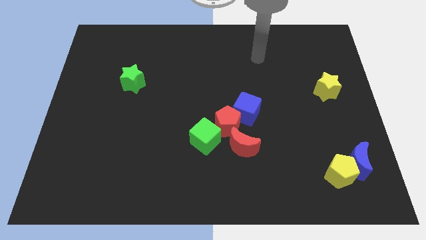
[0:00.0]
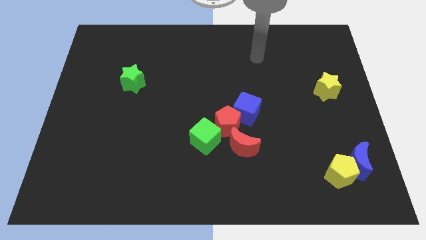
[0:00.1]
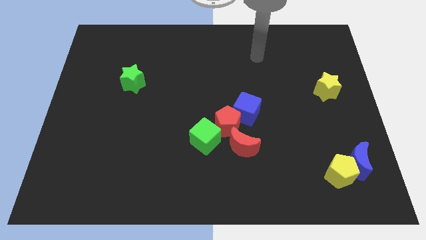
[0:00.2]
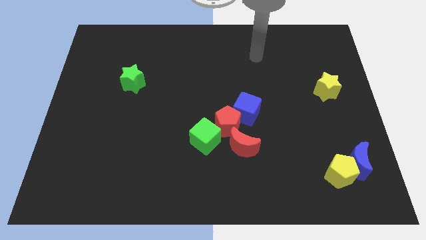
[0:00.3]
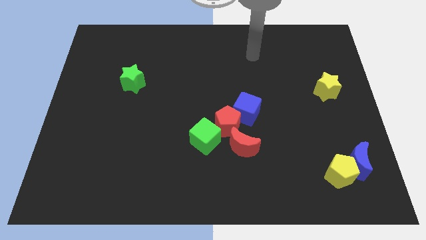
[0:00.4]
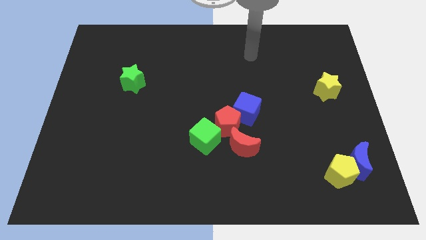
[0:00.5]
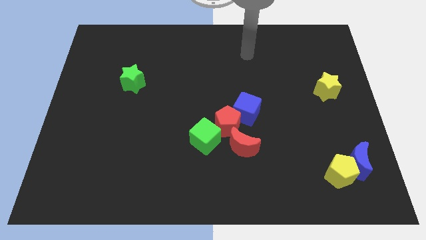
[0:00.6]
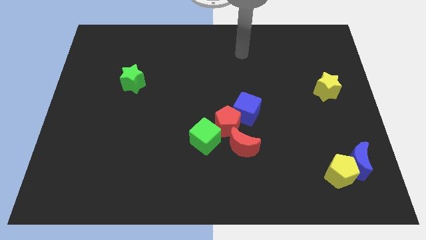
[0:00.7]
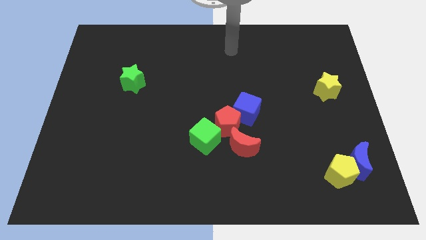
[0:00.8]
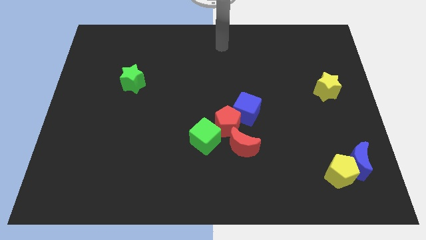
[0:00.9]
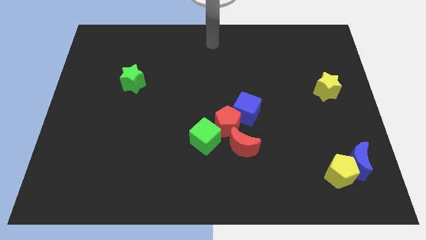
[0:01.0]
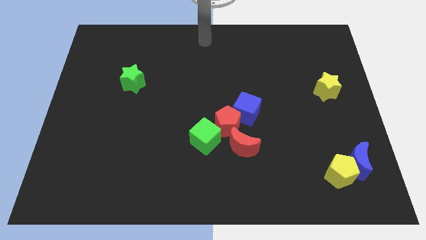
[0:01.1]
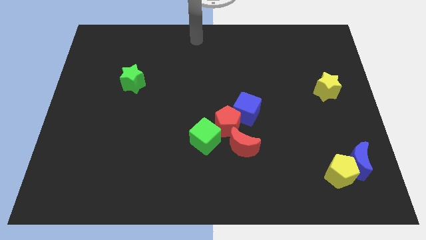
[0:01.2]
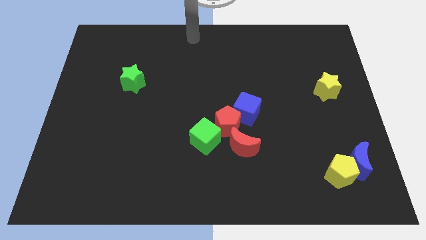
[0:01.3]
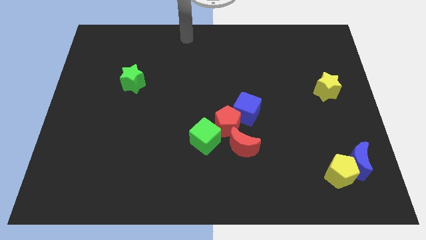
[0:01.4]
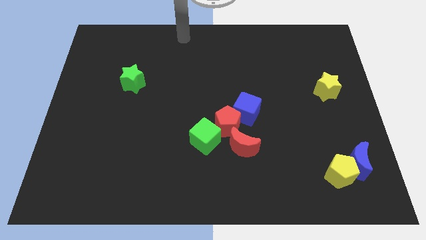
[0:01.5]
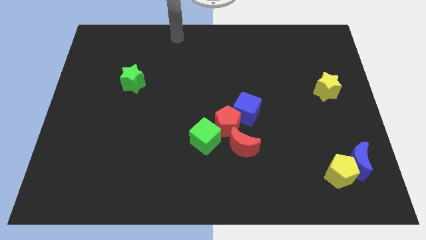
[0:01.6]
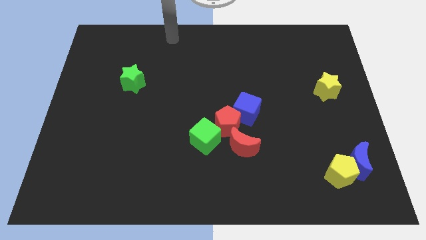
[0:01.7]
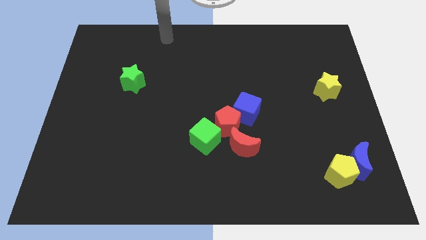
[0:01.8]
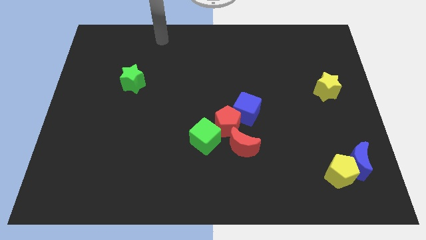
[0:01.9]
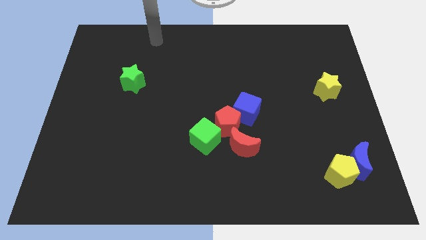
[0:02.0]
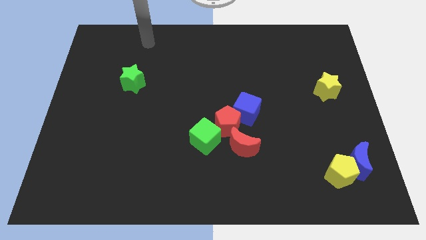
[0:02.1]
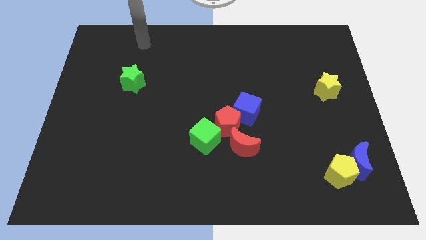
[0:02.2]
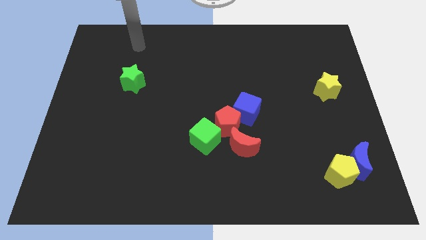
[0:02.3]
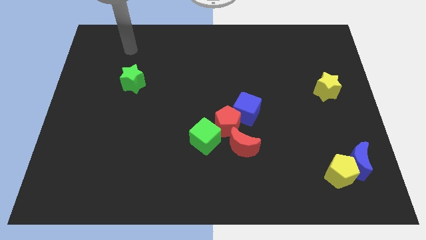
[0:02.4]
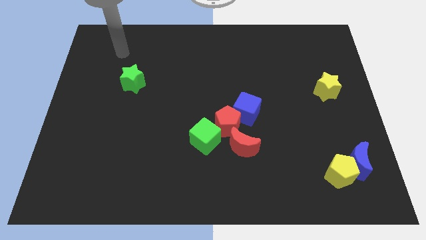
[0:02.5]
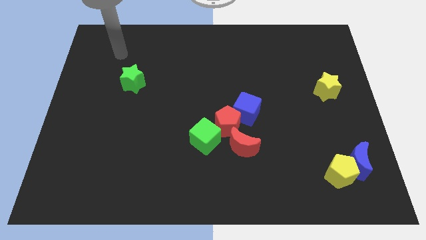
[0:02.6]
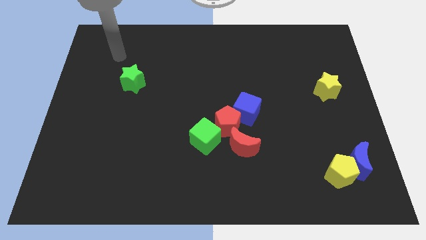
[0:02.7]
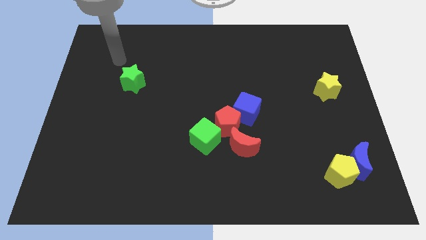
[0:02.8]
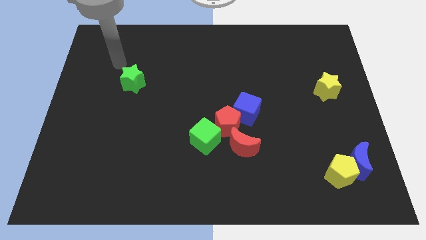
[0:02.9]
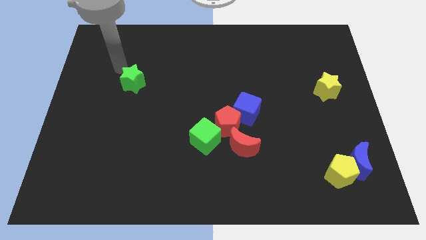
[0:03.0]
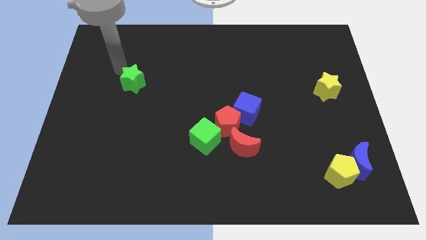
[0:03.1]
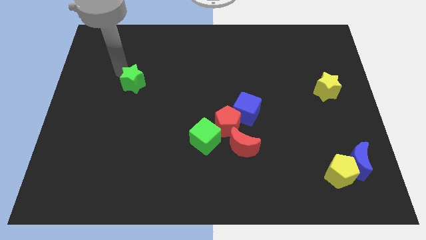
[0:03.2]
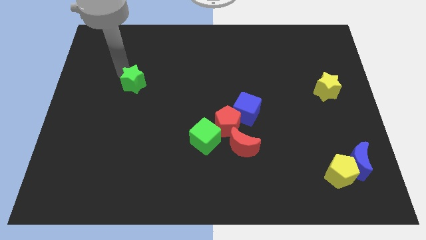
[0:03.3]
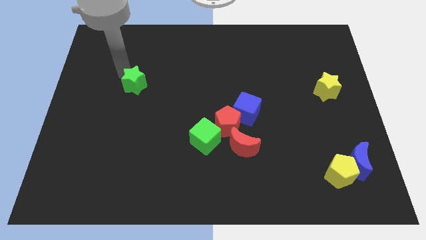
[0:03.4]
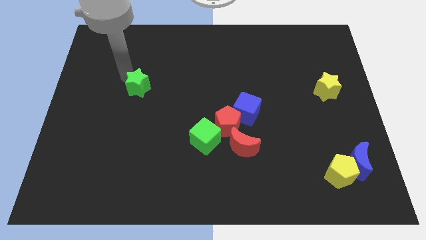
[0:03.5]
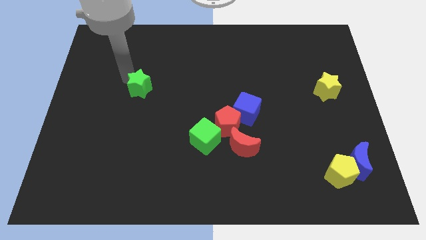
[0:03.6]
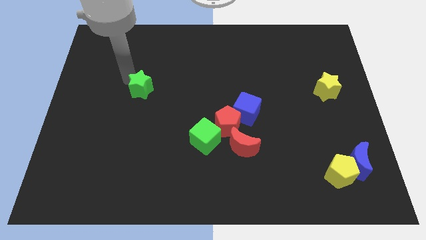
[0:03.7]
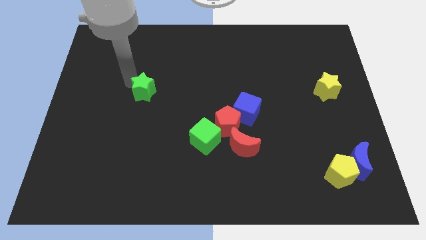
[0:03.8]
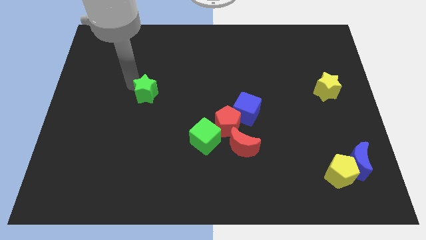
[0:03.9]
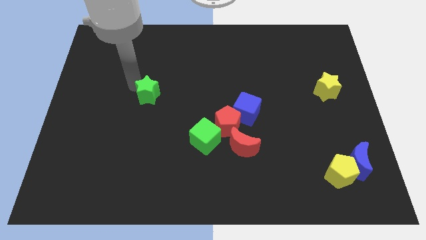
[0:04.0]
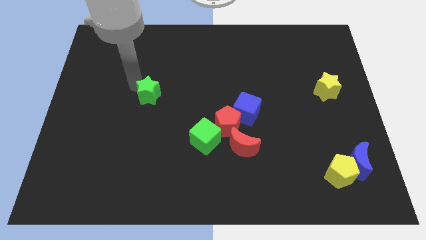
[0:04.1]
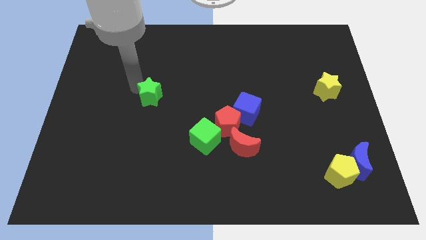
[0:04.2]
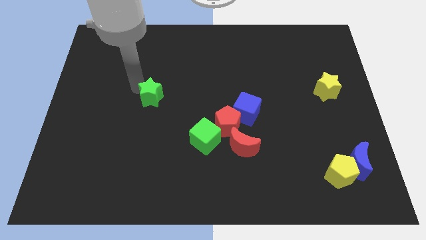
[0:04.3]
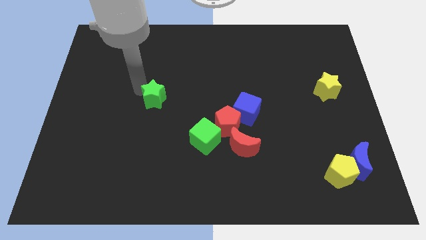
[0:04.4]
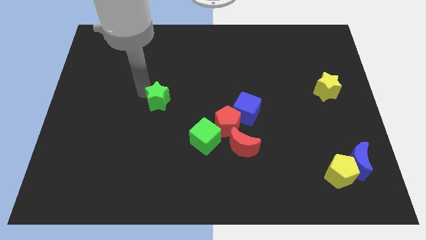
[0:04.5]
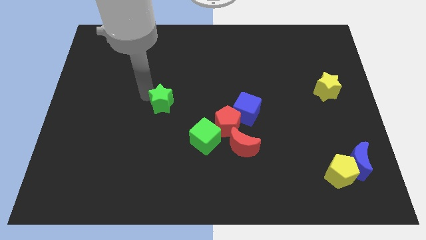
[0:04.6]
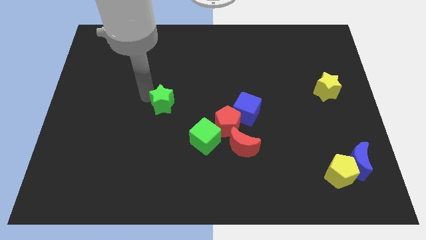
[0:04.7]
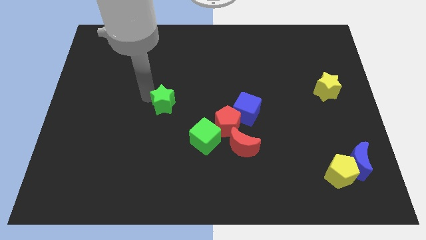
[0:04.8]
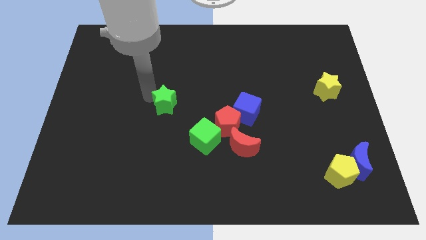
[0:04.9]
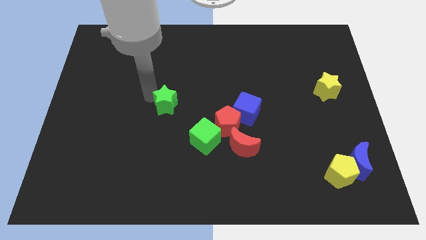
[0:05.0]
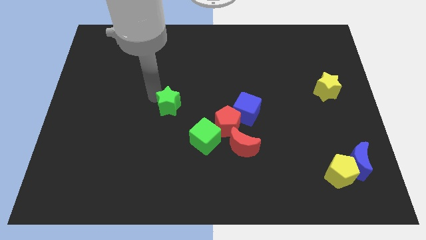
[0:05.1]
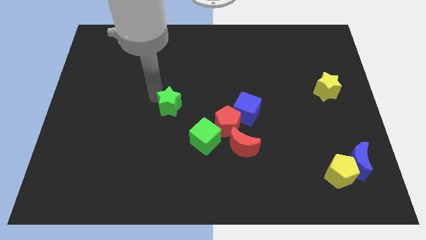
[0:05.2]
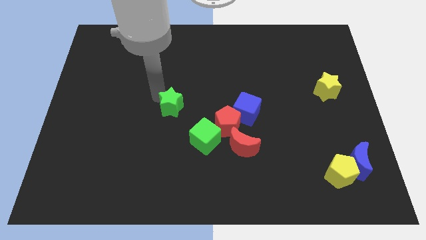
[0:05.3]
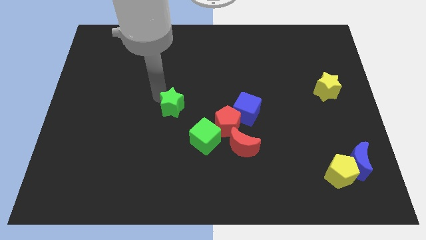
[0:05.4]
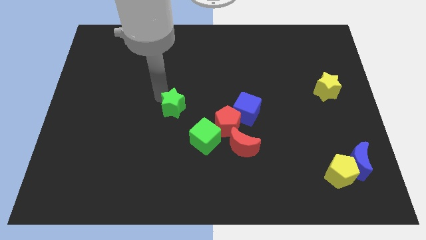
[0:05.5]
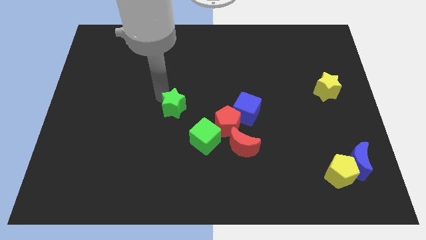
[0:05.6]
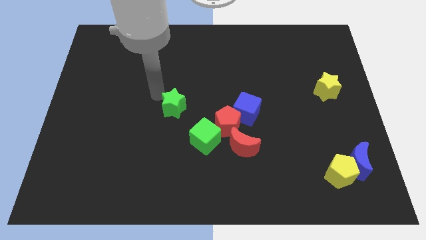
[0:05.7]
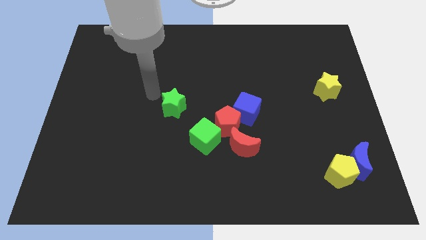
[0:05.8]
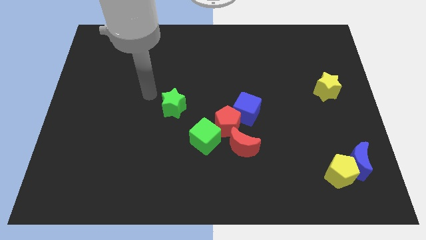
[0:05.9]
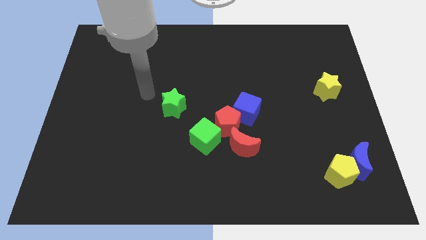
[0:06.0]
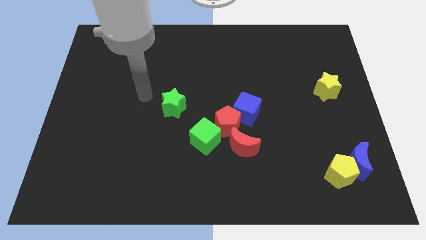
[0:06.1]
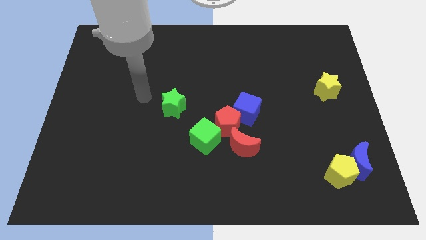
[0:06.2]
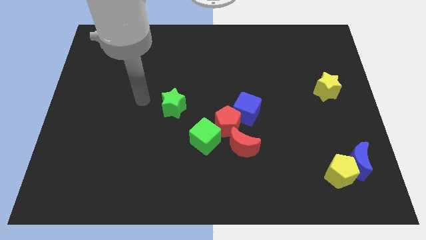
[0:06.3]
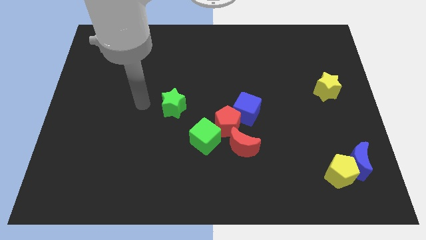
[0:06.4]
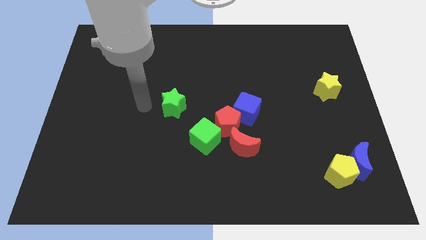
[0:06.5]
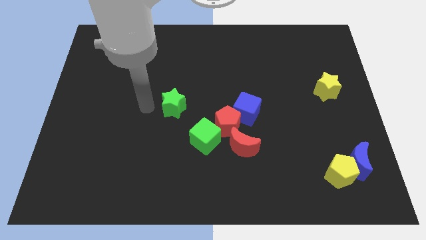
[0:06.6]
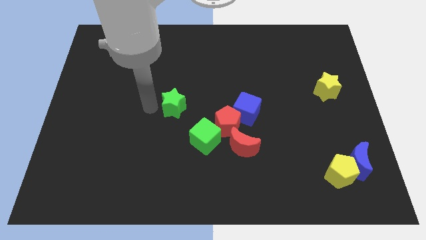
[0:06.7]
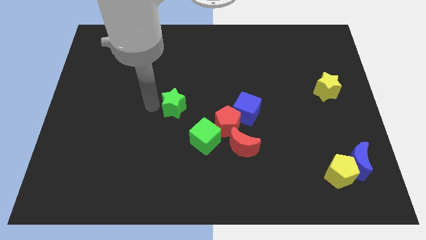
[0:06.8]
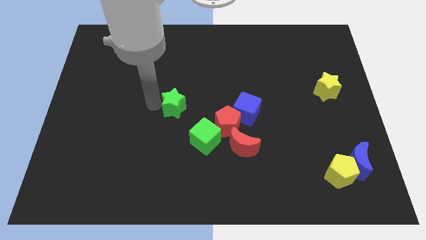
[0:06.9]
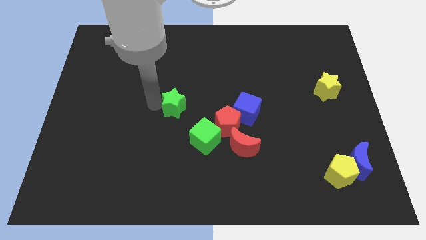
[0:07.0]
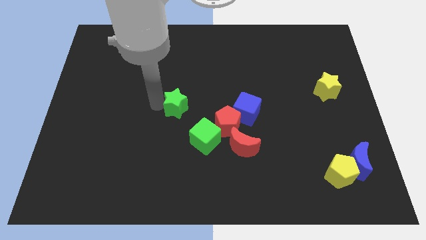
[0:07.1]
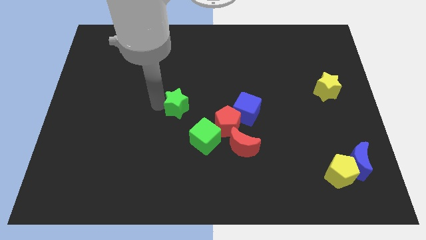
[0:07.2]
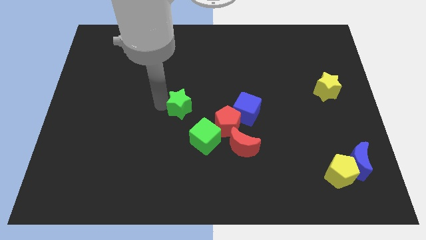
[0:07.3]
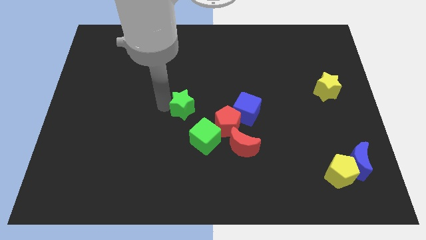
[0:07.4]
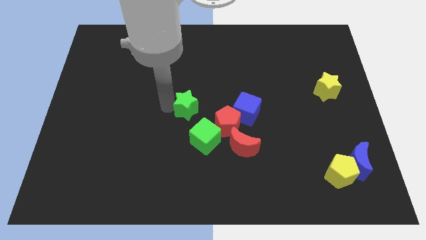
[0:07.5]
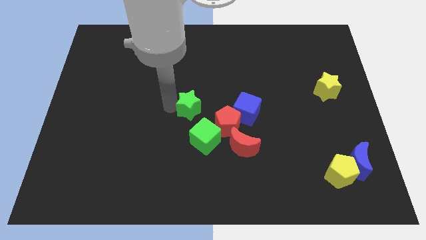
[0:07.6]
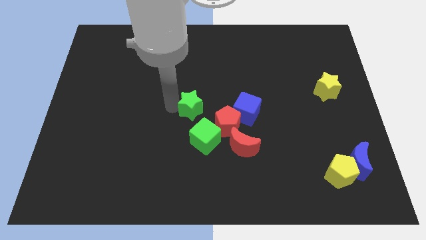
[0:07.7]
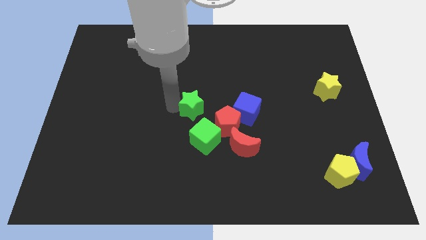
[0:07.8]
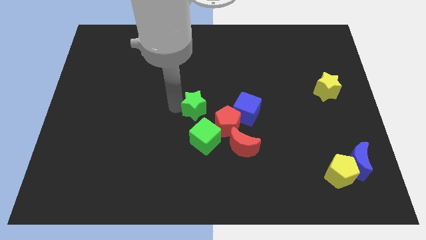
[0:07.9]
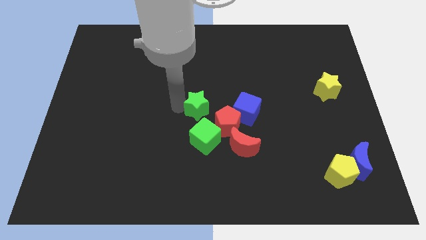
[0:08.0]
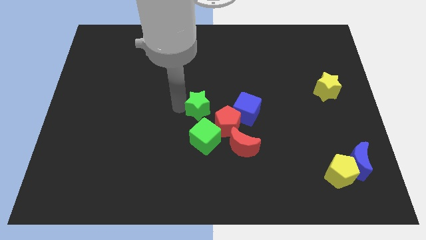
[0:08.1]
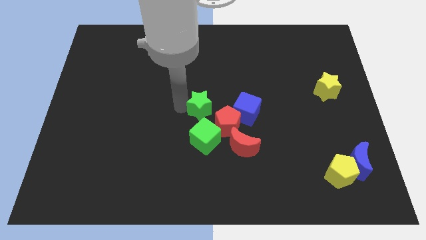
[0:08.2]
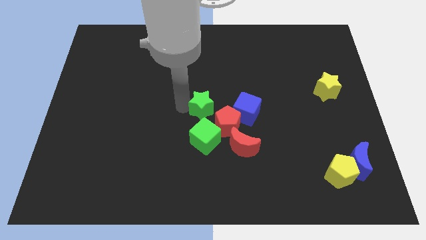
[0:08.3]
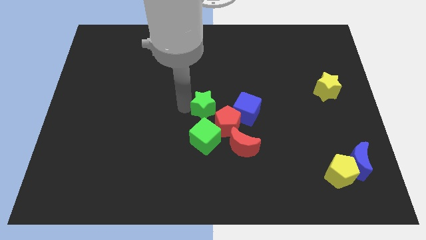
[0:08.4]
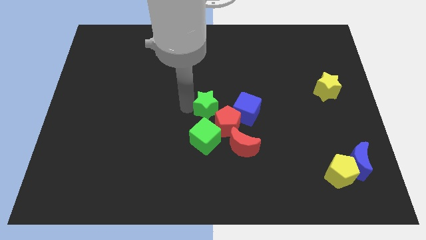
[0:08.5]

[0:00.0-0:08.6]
move the green star to the top of the green cube

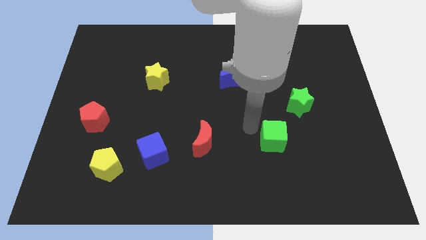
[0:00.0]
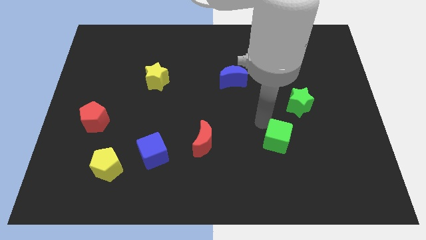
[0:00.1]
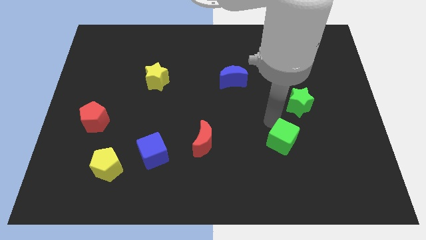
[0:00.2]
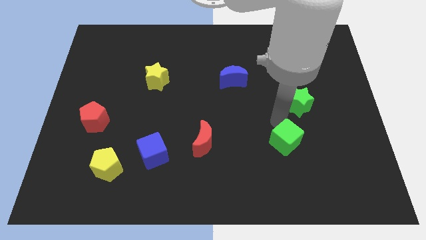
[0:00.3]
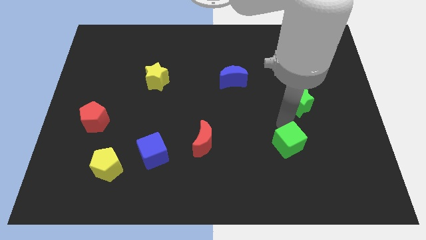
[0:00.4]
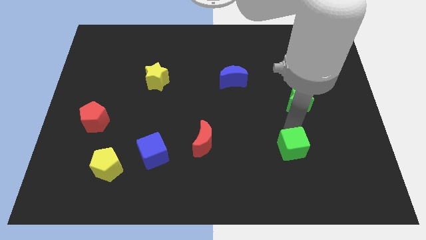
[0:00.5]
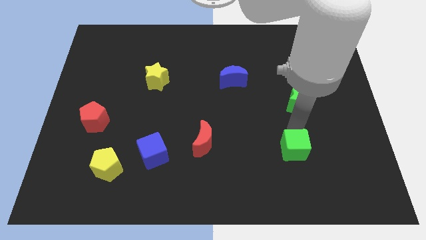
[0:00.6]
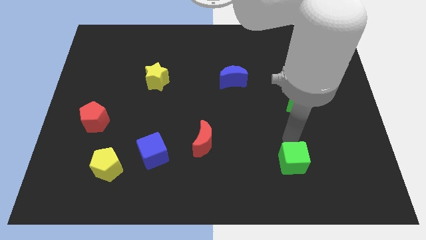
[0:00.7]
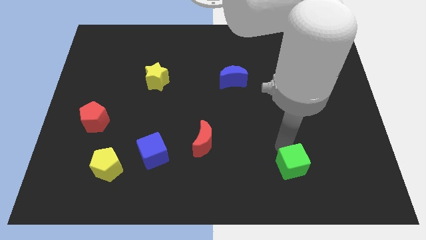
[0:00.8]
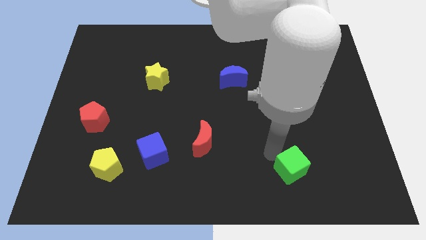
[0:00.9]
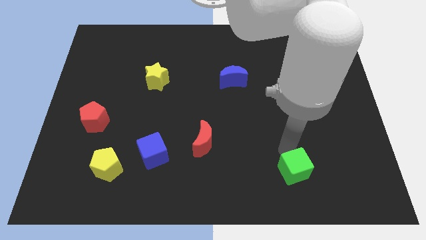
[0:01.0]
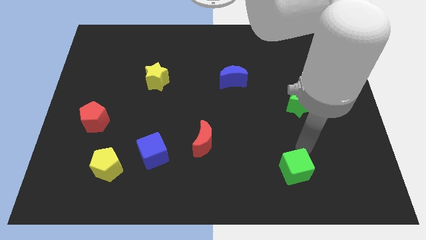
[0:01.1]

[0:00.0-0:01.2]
place the green cube parallel to the bottom of the green star
